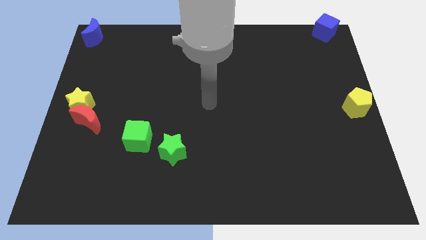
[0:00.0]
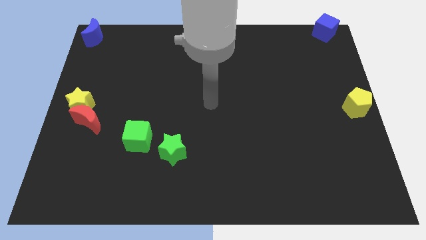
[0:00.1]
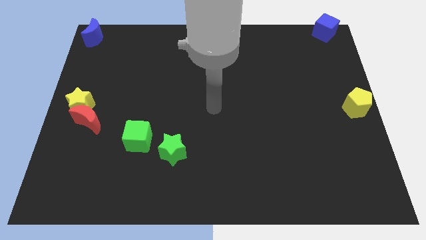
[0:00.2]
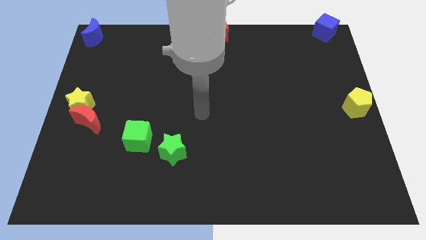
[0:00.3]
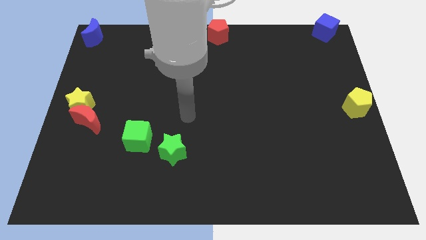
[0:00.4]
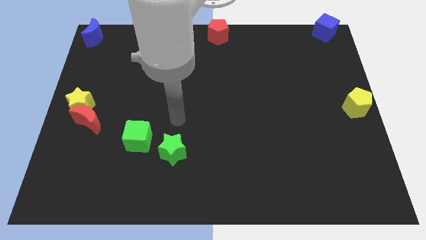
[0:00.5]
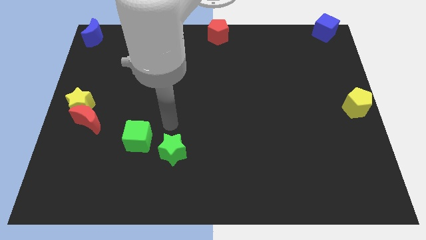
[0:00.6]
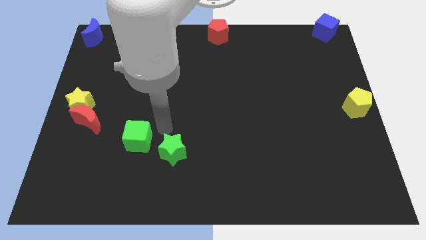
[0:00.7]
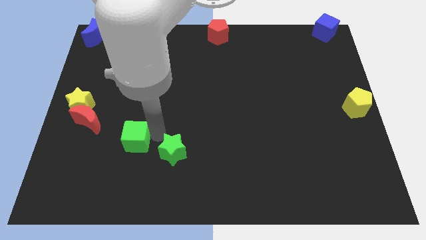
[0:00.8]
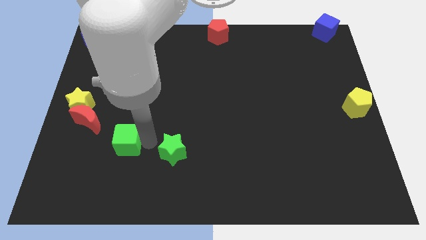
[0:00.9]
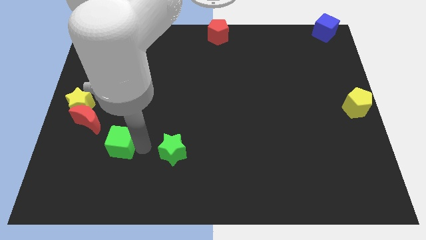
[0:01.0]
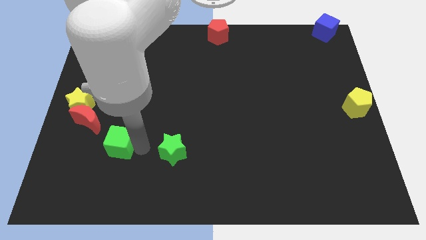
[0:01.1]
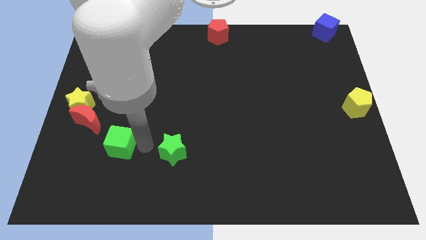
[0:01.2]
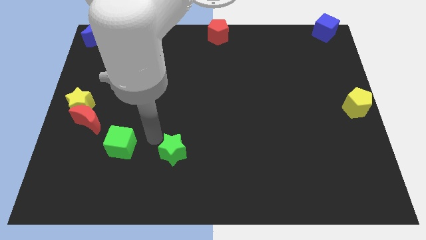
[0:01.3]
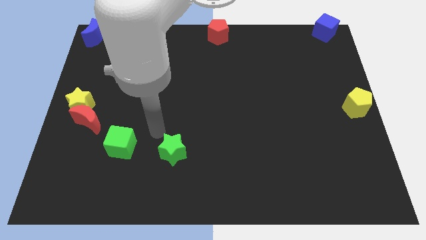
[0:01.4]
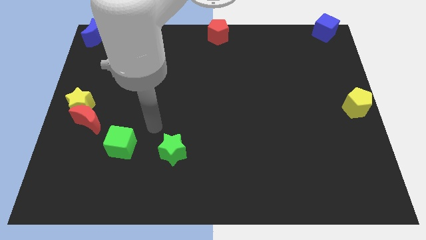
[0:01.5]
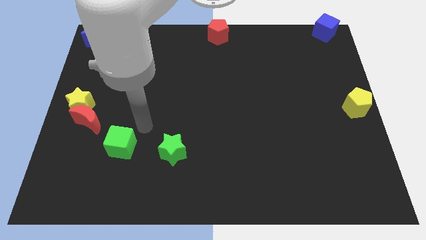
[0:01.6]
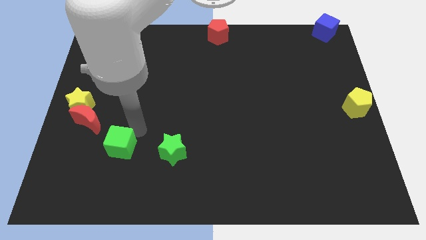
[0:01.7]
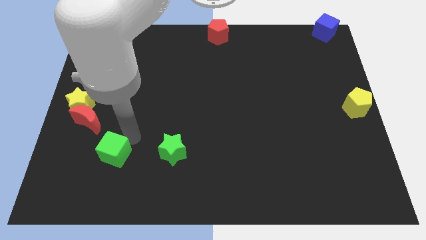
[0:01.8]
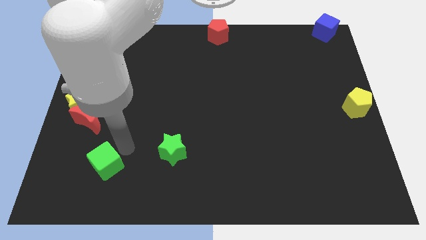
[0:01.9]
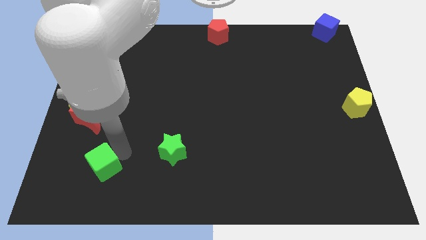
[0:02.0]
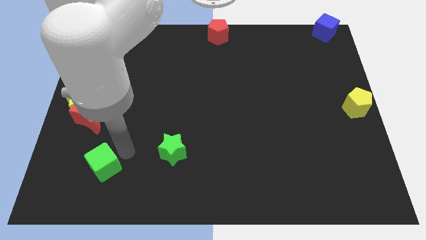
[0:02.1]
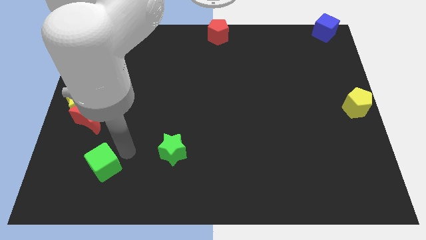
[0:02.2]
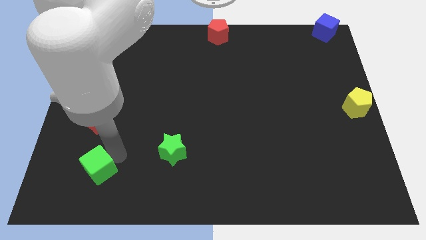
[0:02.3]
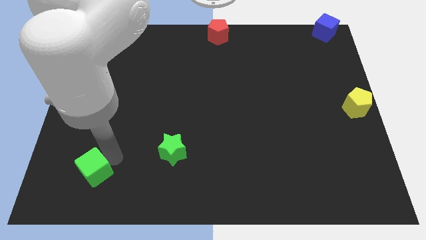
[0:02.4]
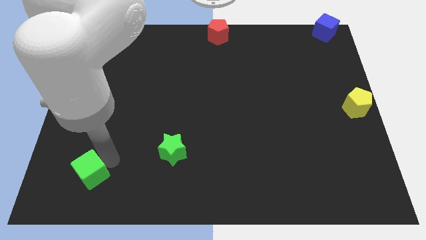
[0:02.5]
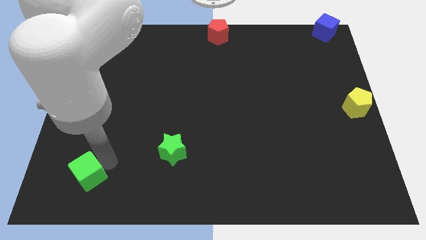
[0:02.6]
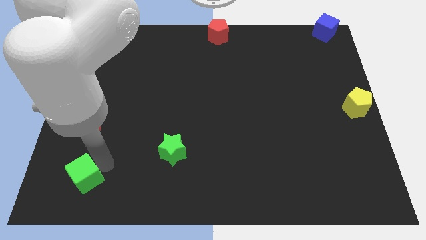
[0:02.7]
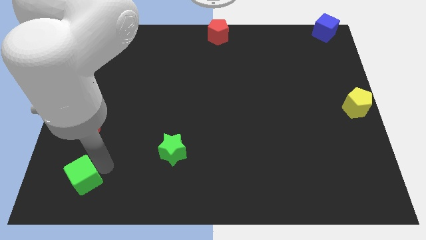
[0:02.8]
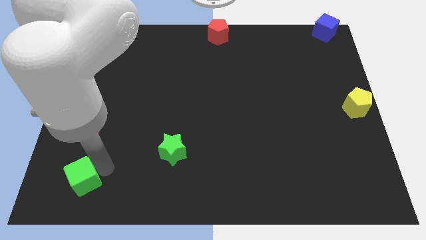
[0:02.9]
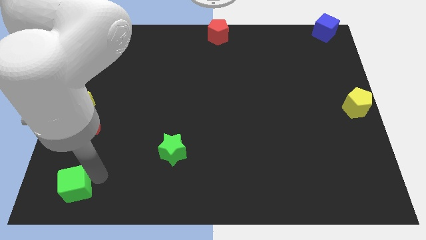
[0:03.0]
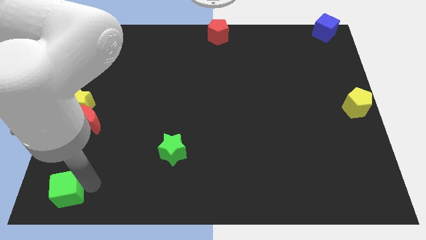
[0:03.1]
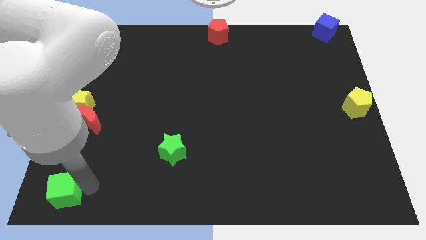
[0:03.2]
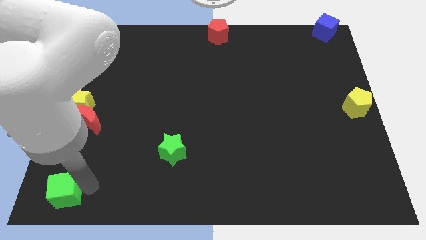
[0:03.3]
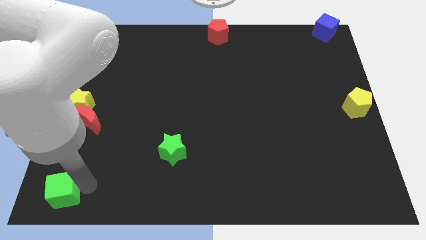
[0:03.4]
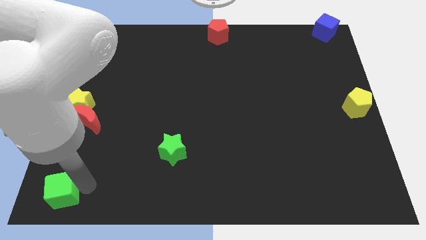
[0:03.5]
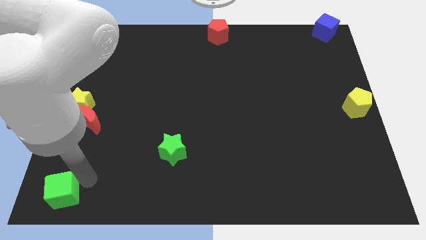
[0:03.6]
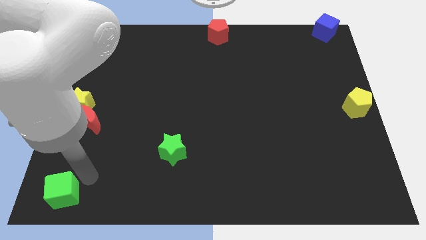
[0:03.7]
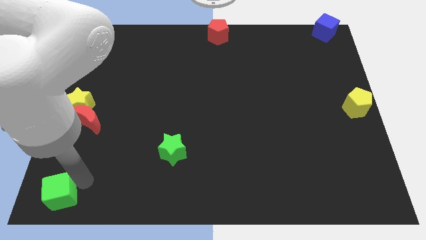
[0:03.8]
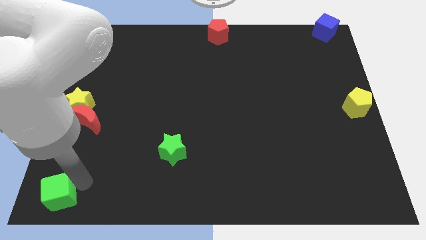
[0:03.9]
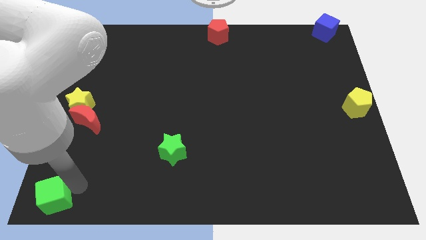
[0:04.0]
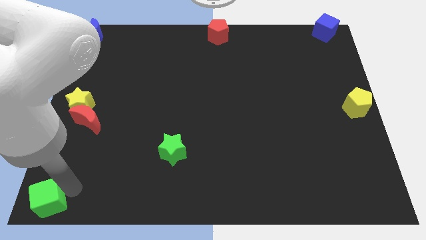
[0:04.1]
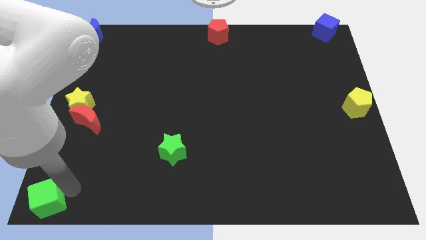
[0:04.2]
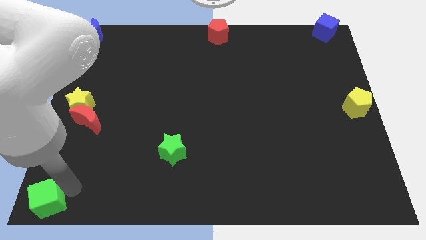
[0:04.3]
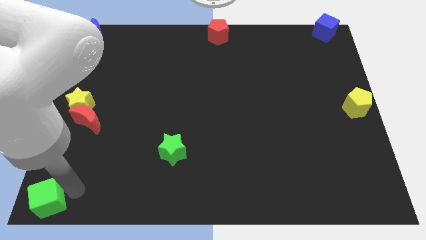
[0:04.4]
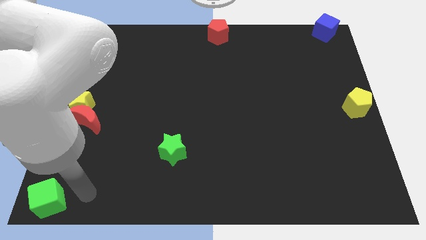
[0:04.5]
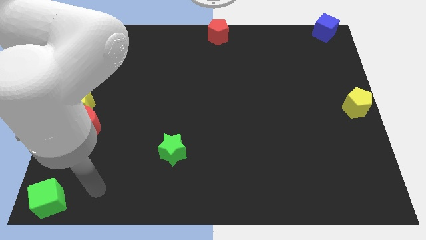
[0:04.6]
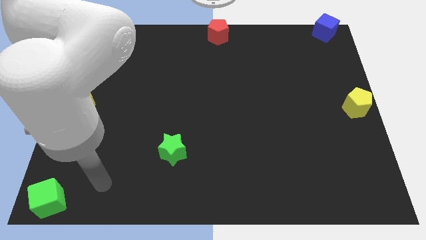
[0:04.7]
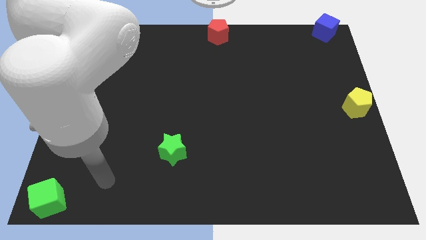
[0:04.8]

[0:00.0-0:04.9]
slide the green block towards the bottom left of the board

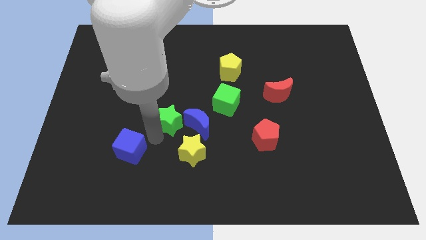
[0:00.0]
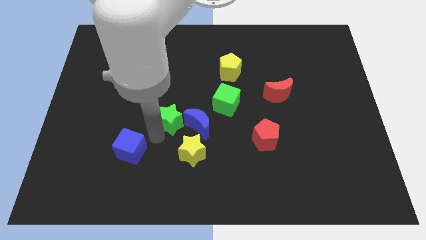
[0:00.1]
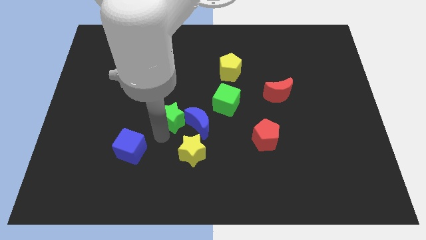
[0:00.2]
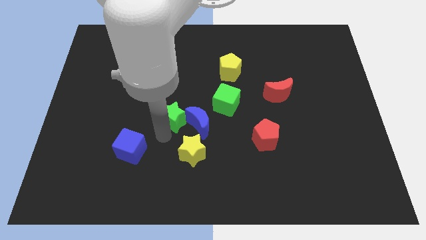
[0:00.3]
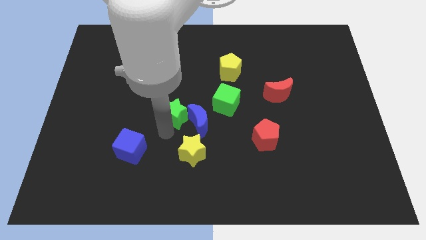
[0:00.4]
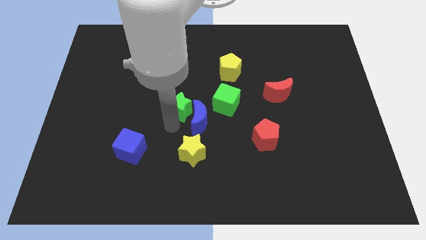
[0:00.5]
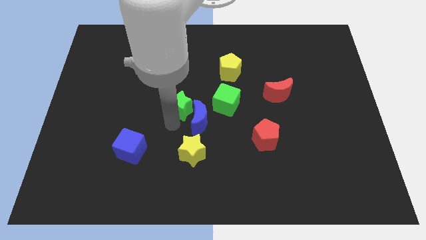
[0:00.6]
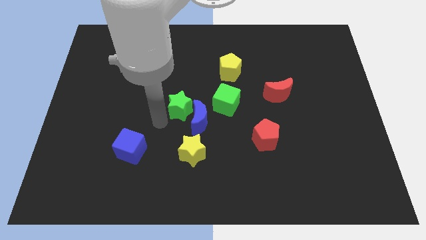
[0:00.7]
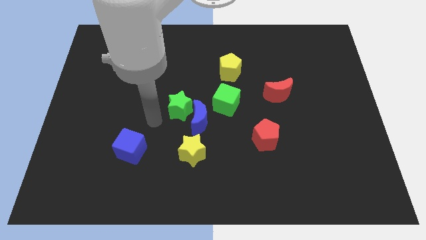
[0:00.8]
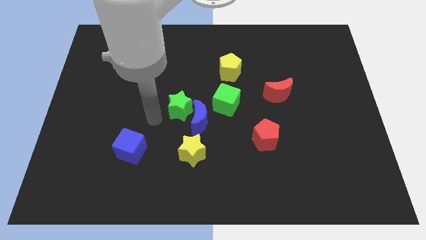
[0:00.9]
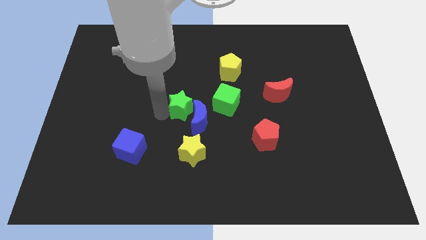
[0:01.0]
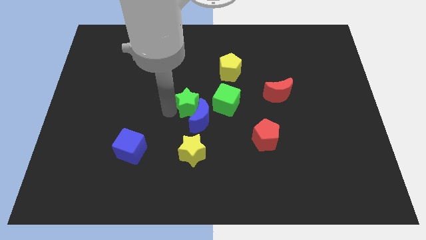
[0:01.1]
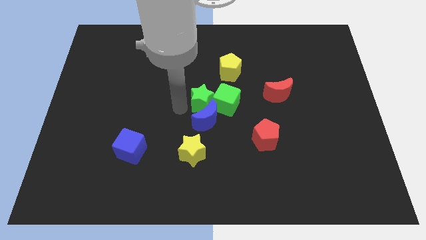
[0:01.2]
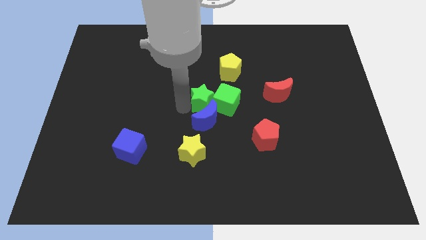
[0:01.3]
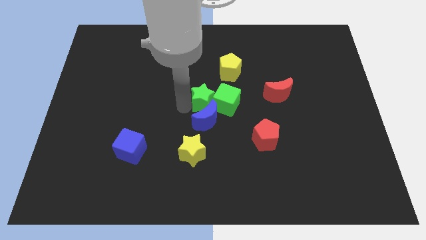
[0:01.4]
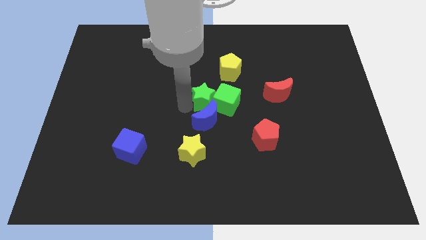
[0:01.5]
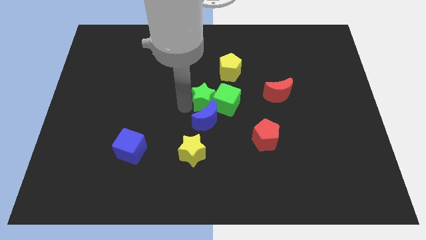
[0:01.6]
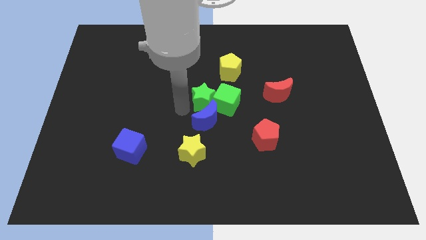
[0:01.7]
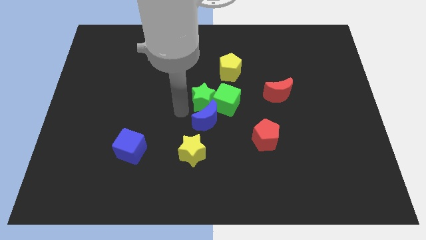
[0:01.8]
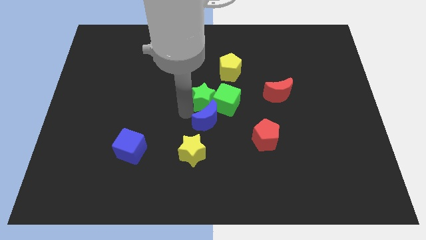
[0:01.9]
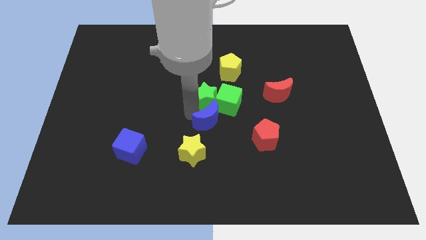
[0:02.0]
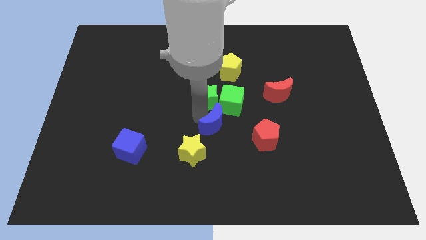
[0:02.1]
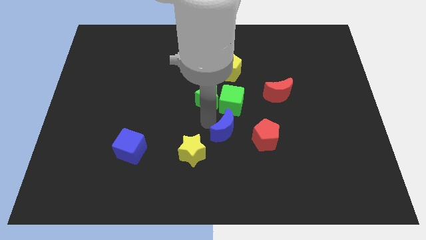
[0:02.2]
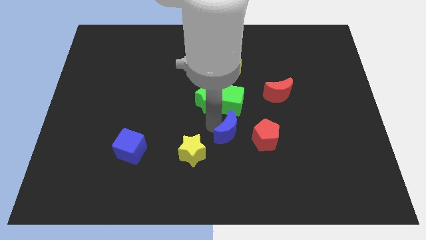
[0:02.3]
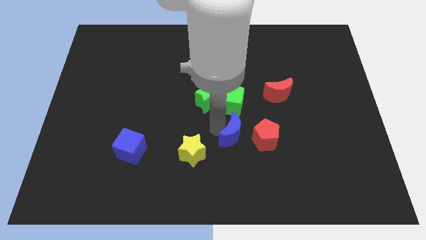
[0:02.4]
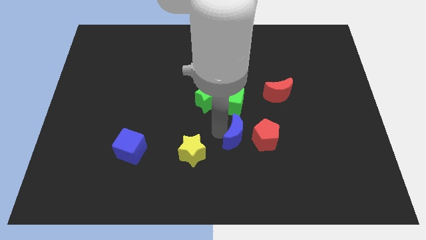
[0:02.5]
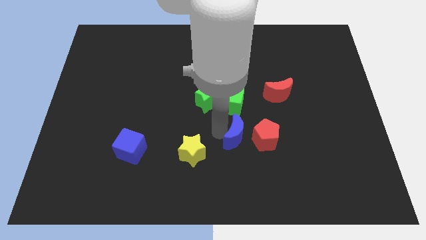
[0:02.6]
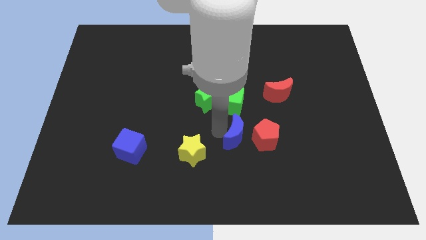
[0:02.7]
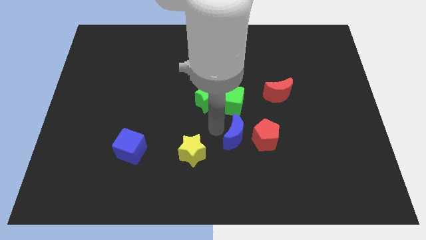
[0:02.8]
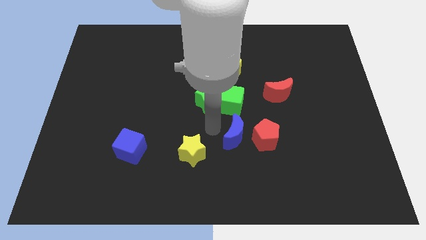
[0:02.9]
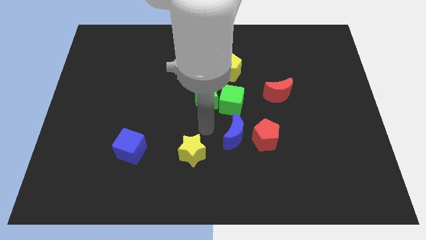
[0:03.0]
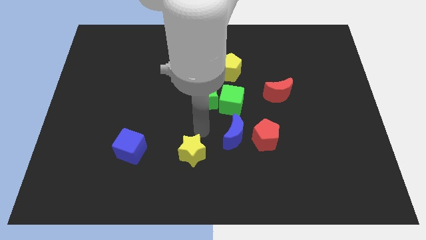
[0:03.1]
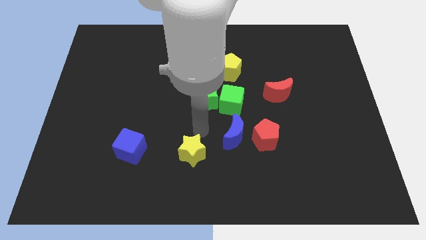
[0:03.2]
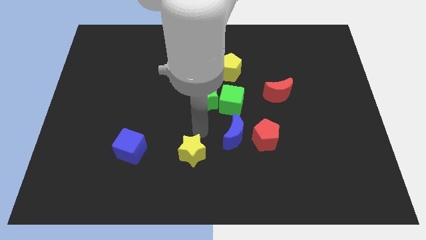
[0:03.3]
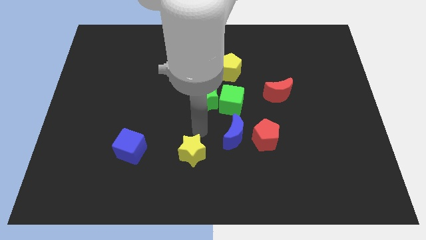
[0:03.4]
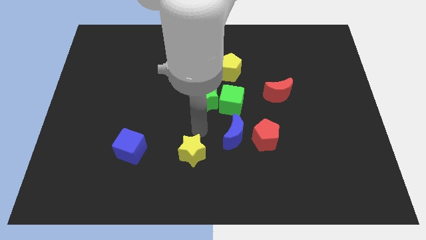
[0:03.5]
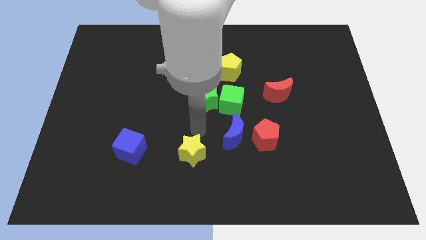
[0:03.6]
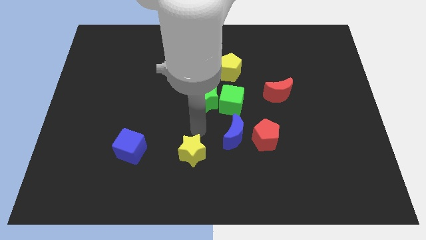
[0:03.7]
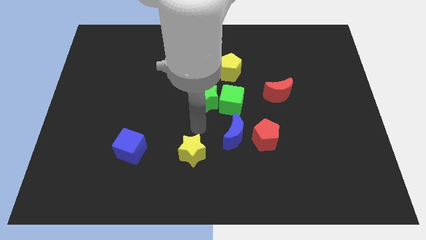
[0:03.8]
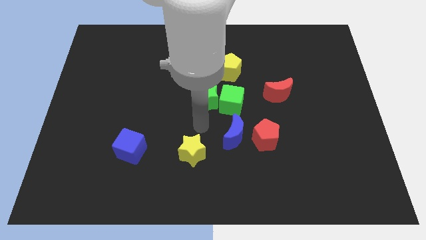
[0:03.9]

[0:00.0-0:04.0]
separate the green star and the blue crescent
